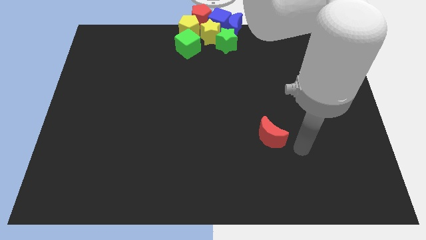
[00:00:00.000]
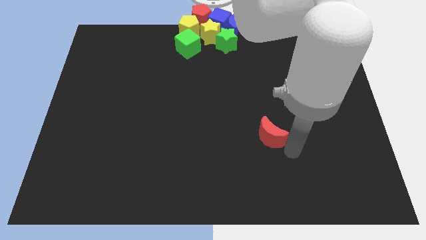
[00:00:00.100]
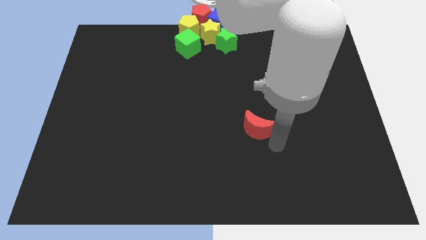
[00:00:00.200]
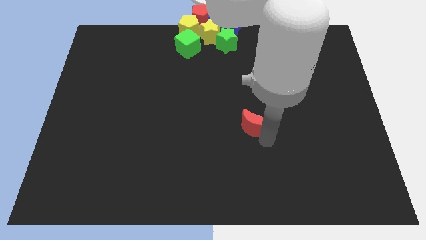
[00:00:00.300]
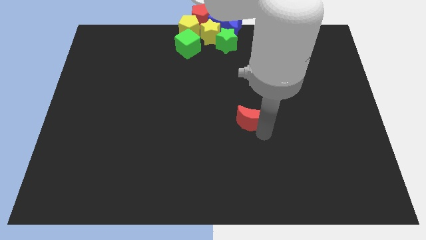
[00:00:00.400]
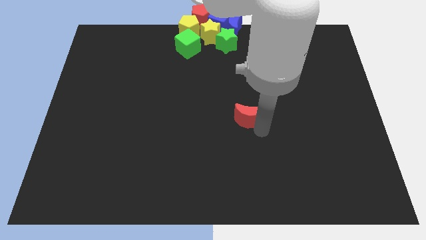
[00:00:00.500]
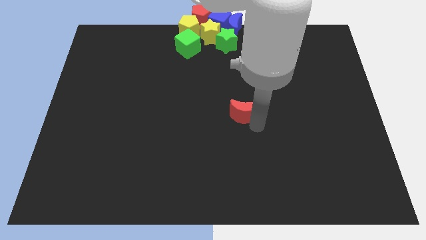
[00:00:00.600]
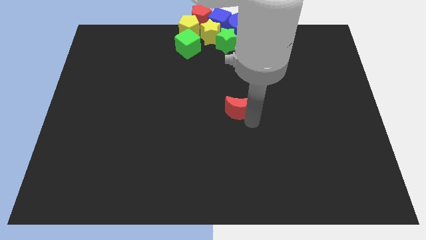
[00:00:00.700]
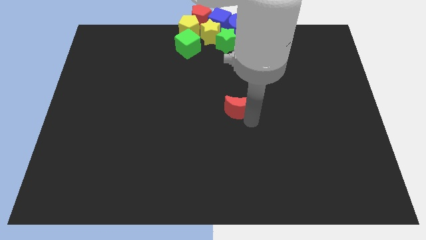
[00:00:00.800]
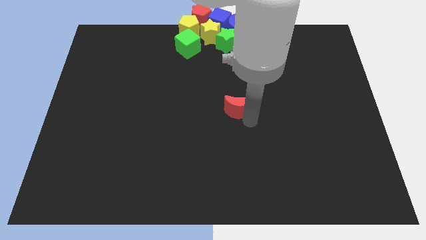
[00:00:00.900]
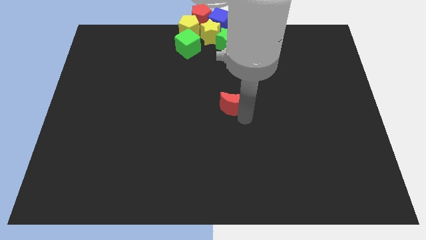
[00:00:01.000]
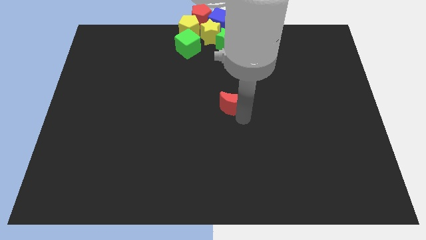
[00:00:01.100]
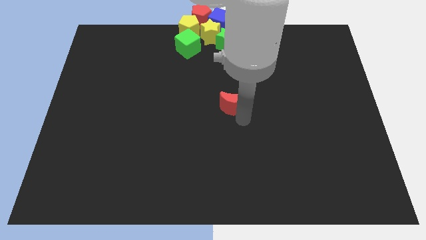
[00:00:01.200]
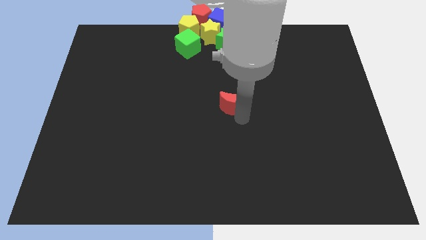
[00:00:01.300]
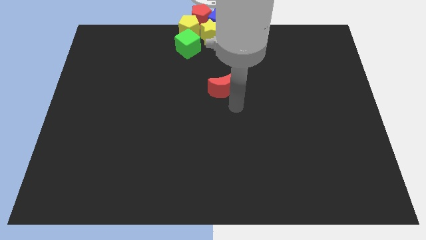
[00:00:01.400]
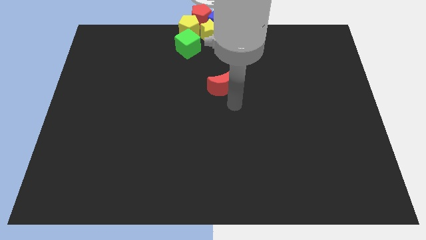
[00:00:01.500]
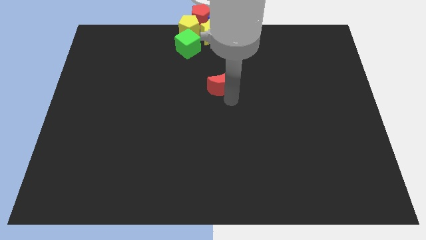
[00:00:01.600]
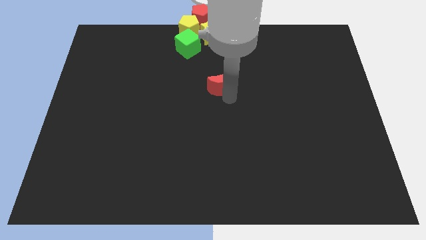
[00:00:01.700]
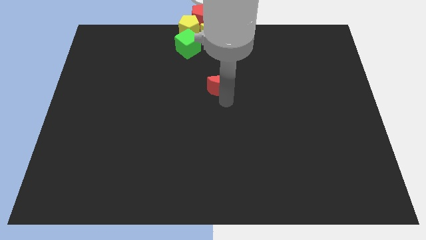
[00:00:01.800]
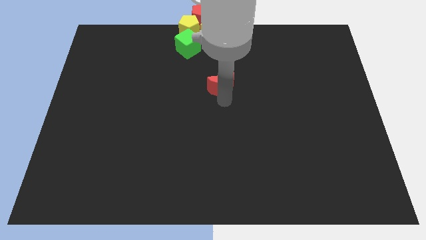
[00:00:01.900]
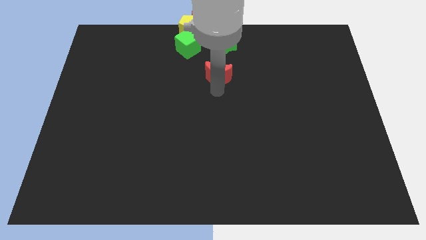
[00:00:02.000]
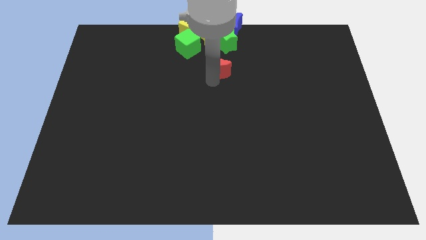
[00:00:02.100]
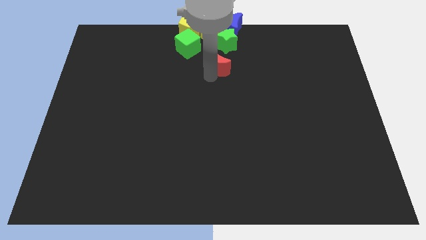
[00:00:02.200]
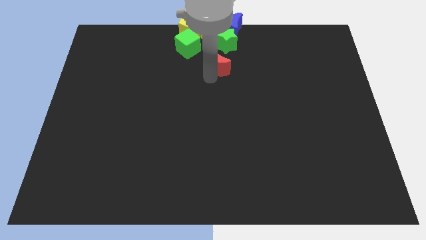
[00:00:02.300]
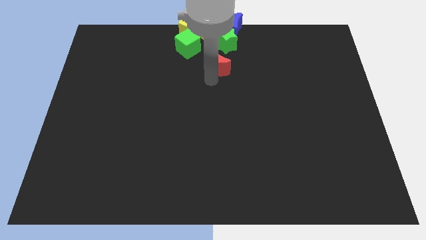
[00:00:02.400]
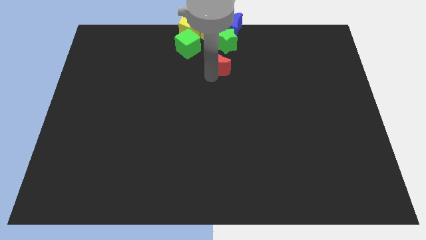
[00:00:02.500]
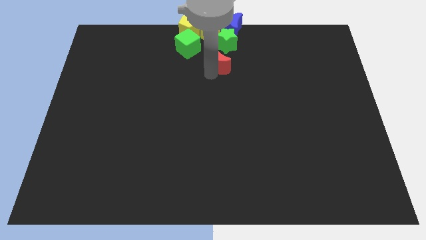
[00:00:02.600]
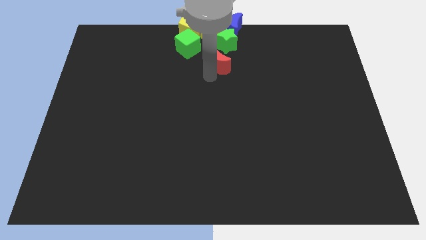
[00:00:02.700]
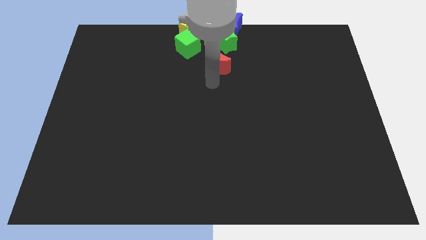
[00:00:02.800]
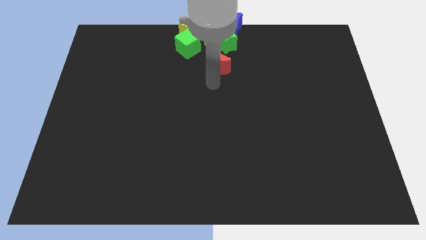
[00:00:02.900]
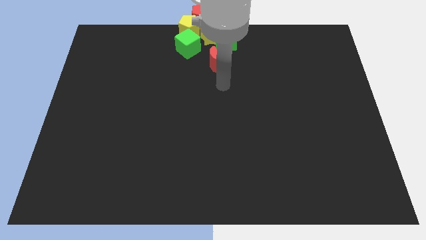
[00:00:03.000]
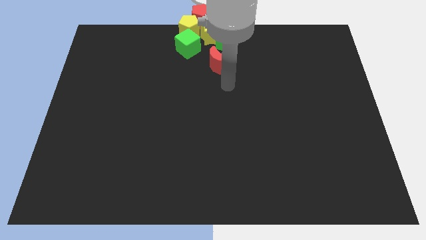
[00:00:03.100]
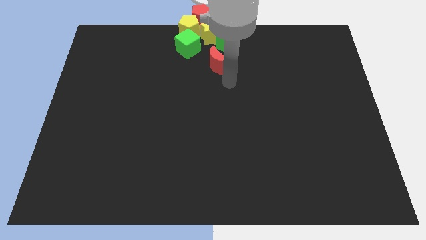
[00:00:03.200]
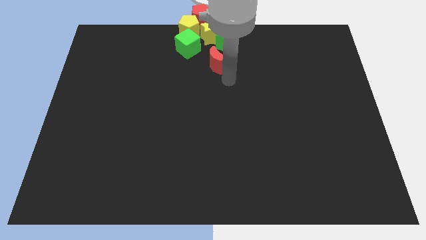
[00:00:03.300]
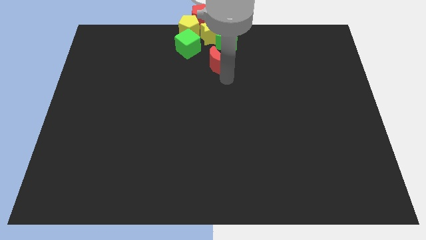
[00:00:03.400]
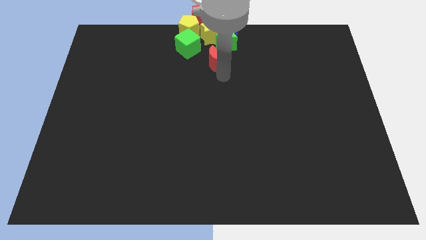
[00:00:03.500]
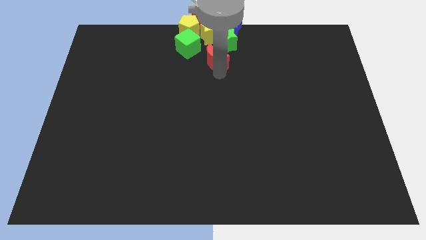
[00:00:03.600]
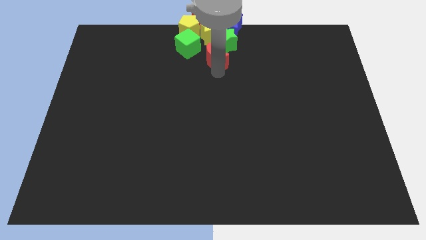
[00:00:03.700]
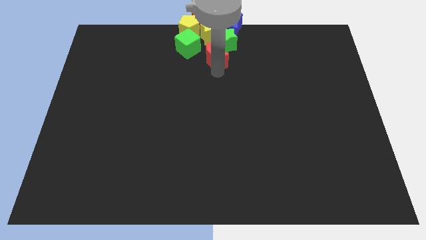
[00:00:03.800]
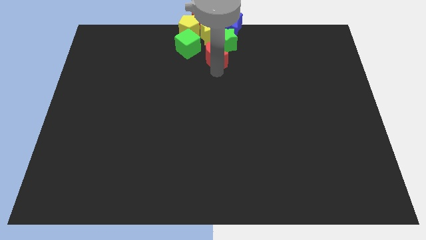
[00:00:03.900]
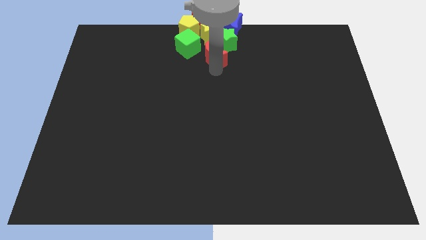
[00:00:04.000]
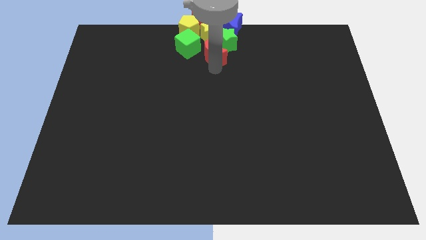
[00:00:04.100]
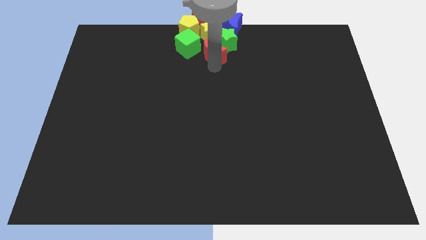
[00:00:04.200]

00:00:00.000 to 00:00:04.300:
move the red moon into the group of blocks

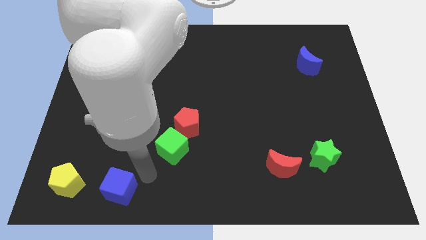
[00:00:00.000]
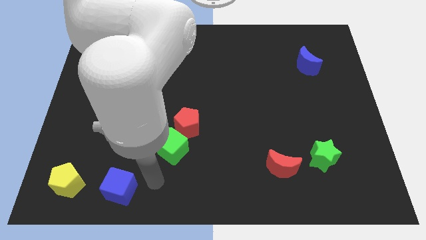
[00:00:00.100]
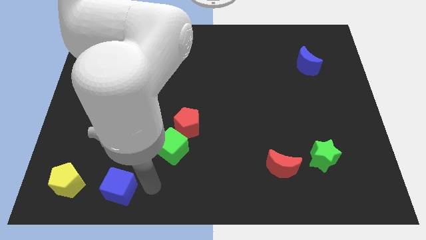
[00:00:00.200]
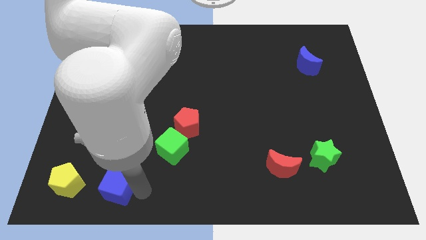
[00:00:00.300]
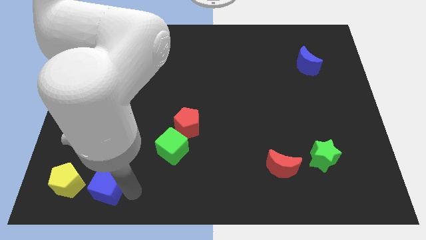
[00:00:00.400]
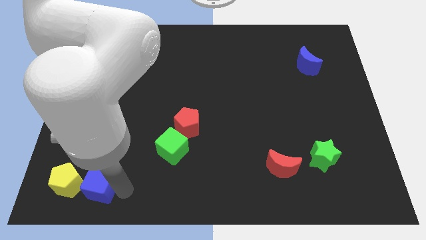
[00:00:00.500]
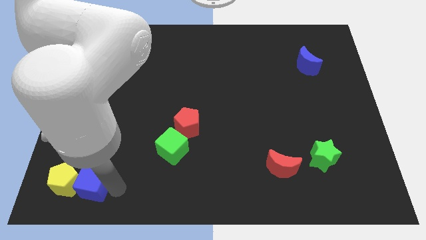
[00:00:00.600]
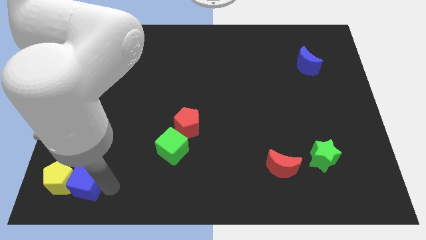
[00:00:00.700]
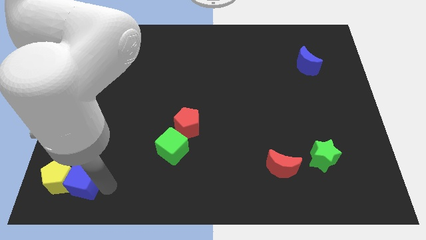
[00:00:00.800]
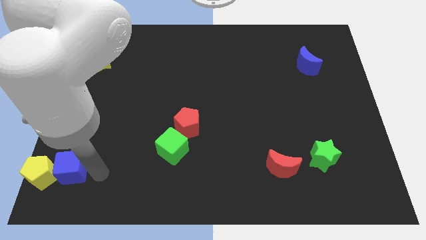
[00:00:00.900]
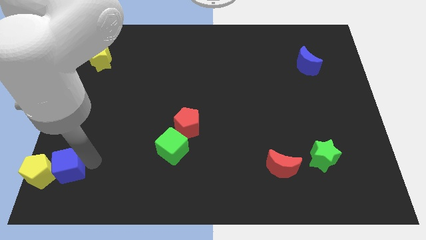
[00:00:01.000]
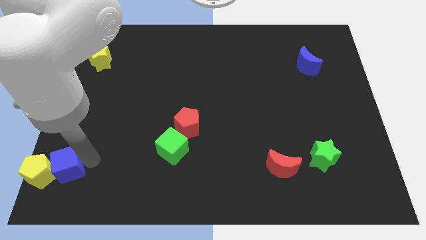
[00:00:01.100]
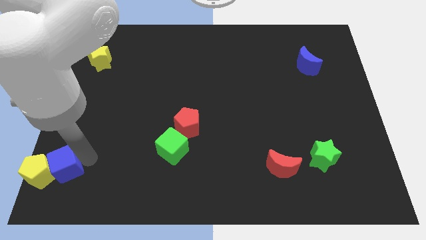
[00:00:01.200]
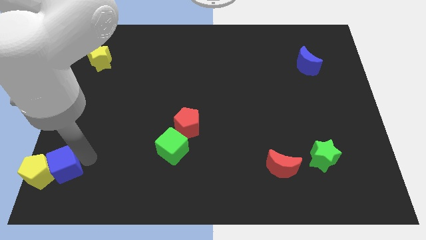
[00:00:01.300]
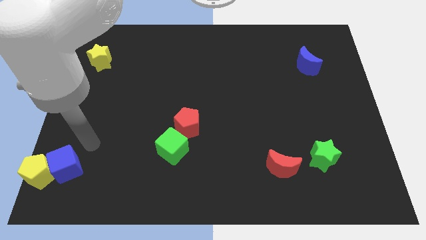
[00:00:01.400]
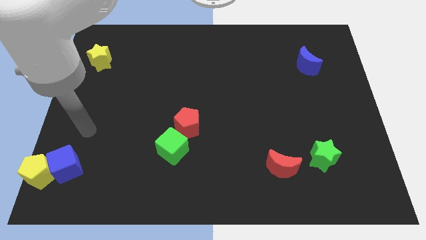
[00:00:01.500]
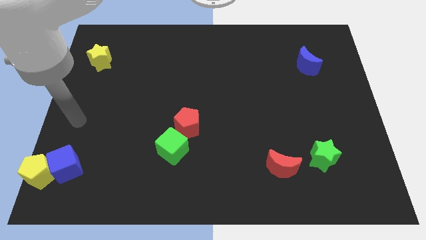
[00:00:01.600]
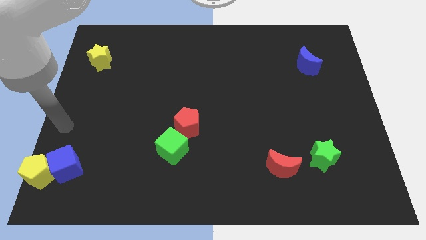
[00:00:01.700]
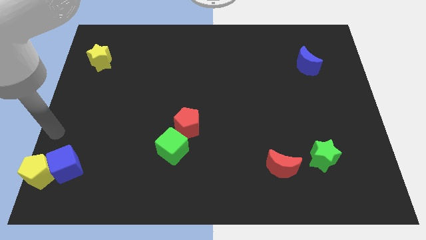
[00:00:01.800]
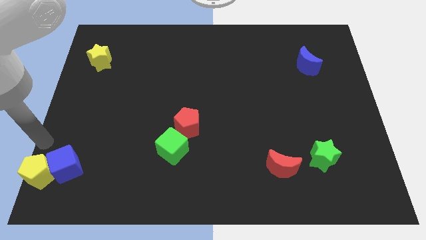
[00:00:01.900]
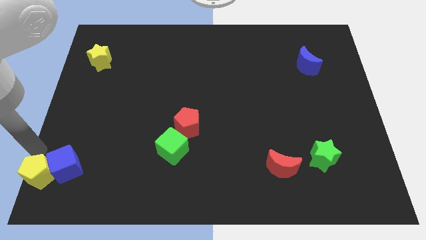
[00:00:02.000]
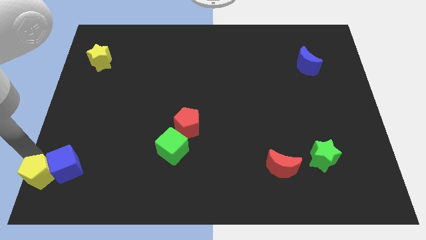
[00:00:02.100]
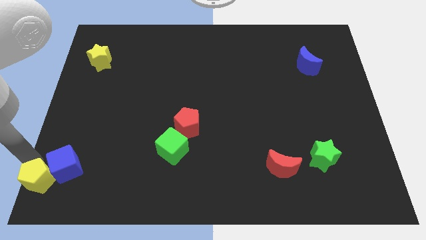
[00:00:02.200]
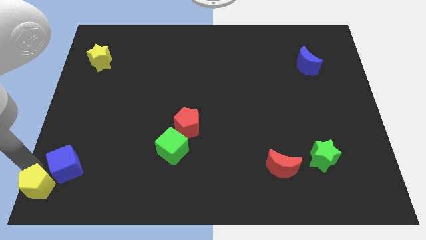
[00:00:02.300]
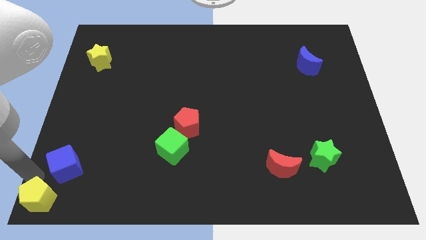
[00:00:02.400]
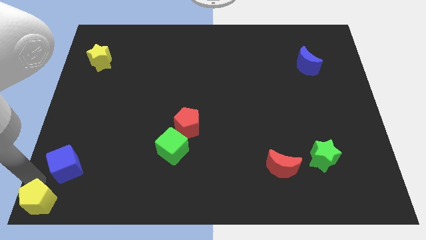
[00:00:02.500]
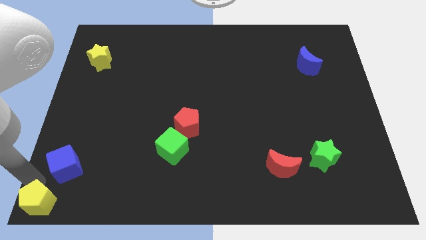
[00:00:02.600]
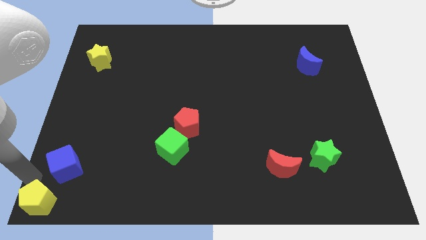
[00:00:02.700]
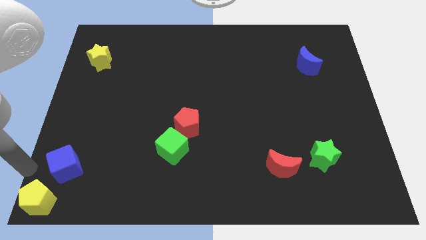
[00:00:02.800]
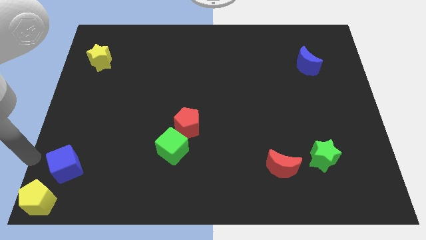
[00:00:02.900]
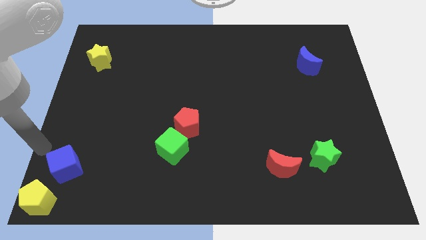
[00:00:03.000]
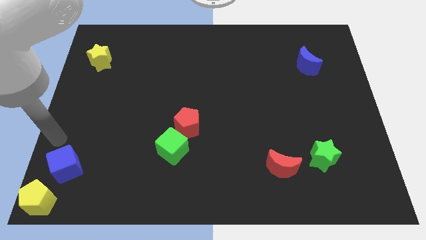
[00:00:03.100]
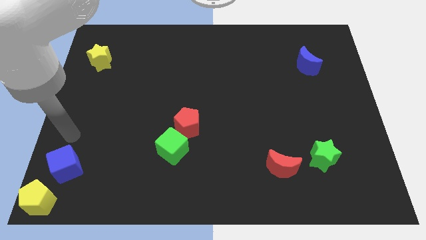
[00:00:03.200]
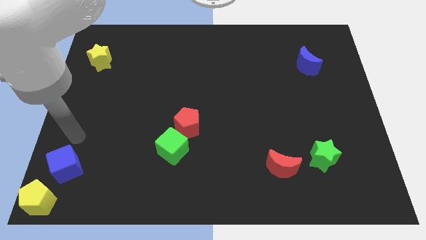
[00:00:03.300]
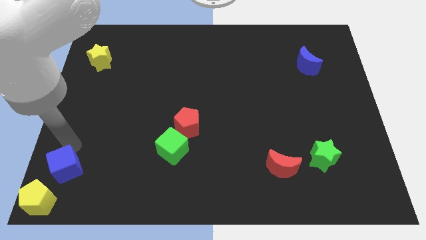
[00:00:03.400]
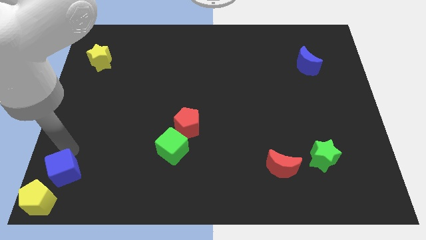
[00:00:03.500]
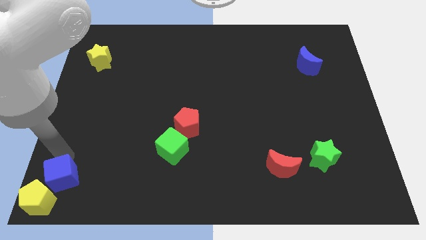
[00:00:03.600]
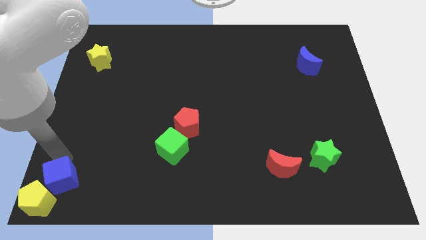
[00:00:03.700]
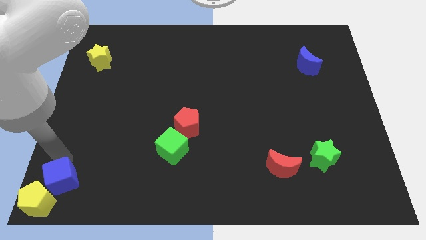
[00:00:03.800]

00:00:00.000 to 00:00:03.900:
push the yellow pentagon towards the left bottom with the help of blue cube

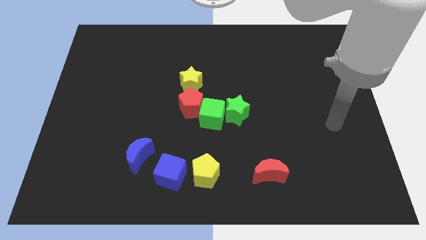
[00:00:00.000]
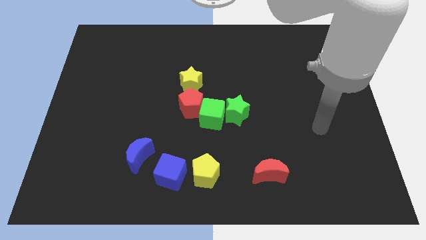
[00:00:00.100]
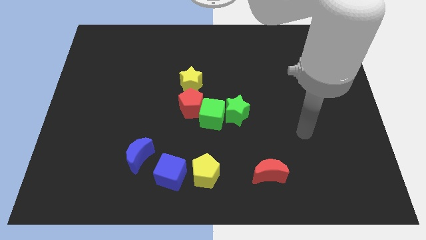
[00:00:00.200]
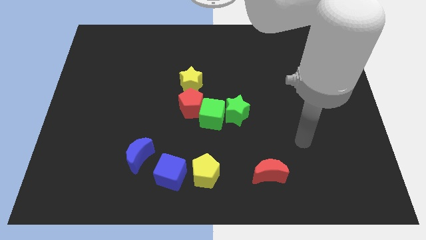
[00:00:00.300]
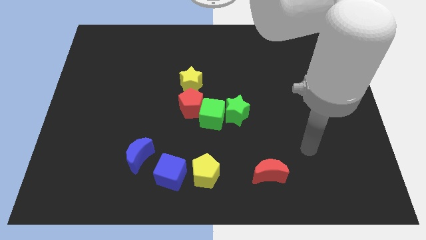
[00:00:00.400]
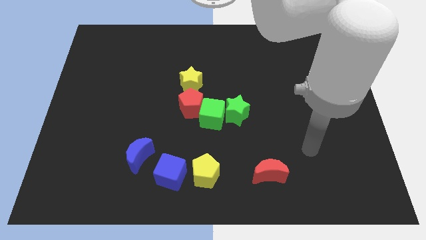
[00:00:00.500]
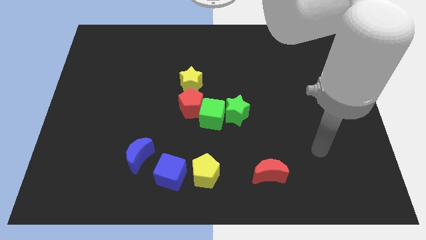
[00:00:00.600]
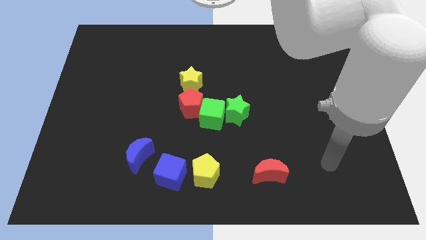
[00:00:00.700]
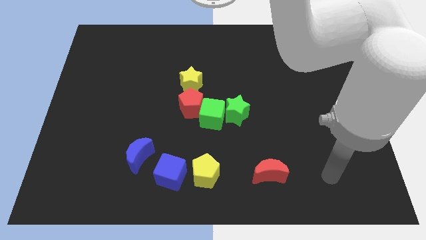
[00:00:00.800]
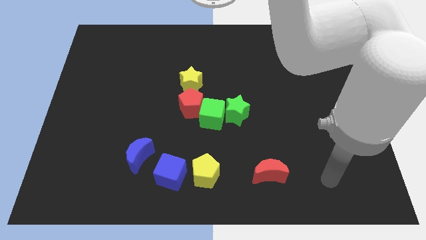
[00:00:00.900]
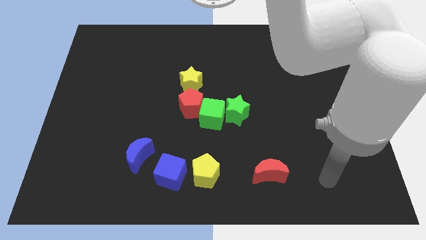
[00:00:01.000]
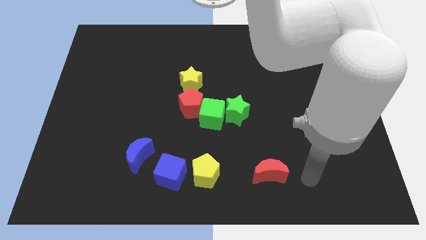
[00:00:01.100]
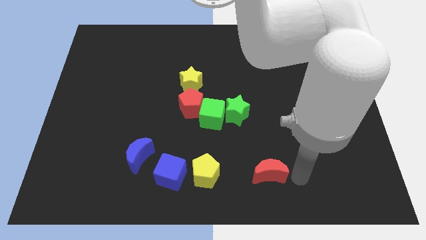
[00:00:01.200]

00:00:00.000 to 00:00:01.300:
place your hand to the right of the red moon
